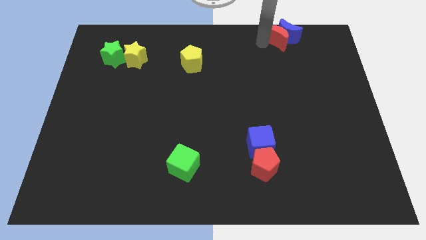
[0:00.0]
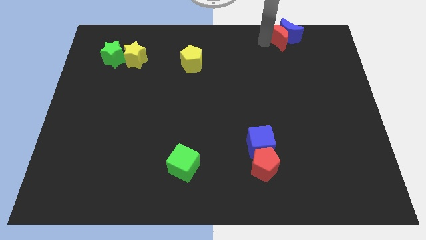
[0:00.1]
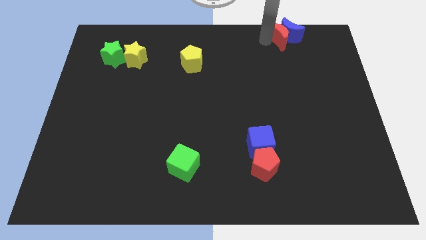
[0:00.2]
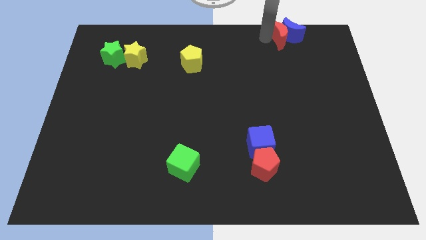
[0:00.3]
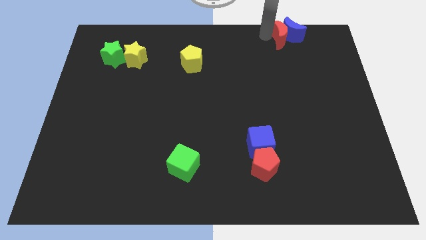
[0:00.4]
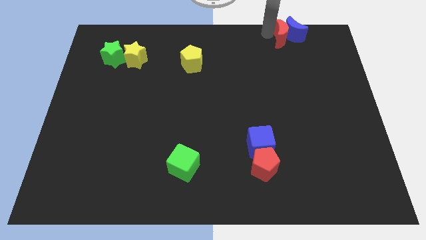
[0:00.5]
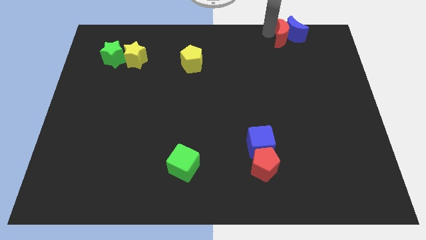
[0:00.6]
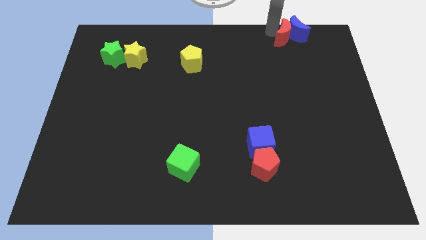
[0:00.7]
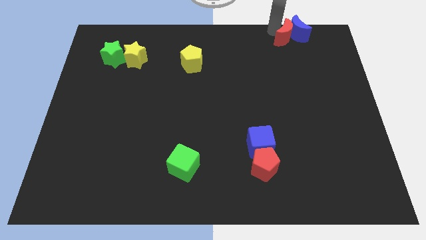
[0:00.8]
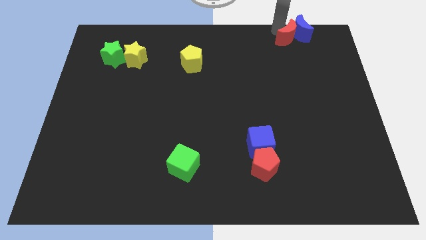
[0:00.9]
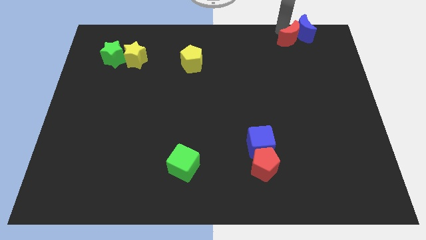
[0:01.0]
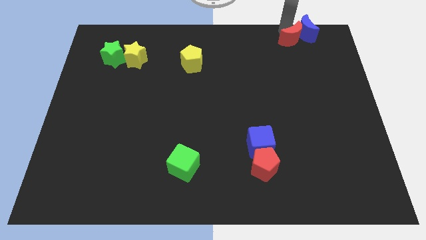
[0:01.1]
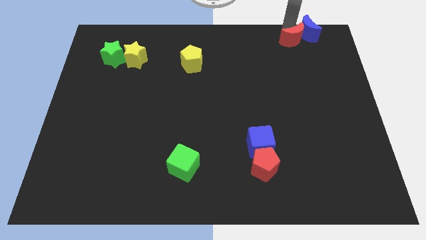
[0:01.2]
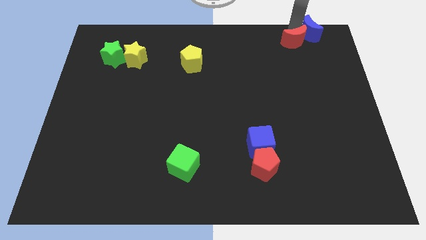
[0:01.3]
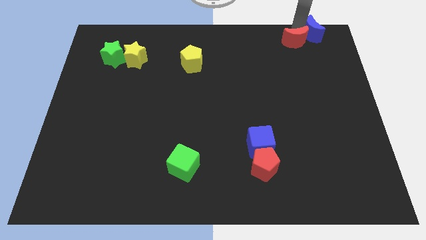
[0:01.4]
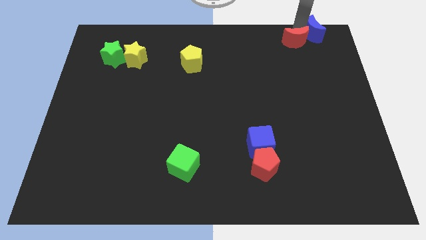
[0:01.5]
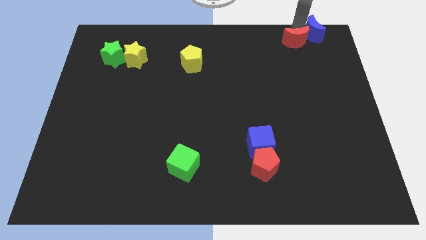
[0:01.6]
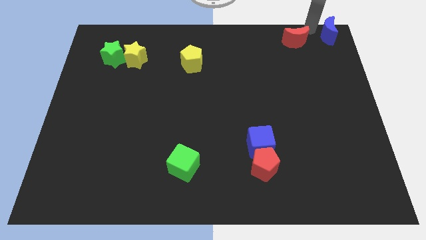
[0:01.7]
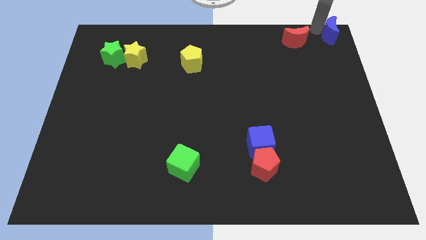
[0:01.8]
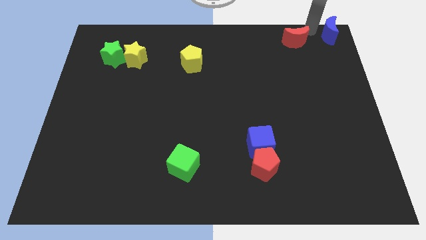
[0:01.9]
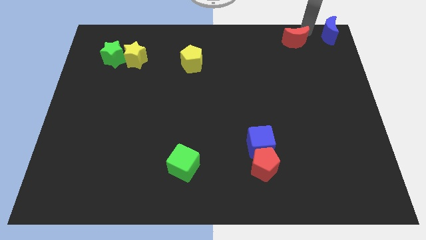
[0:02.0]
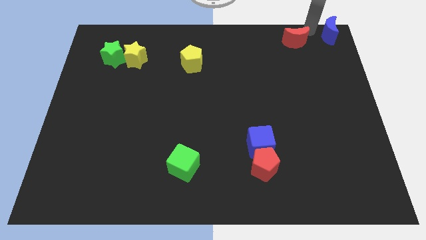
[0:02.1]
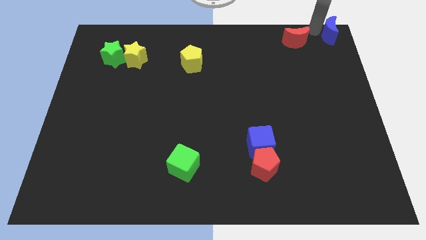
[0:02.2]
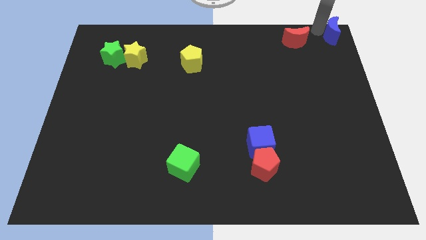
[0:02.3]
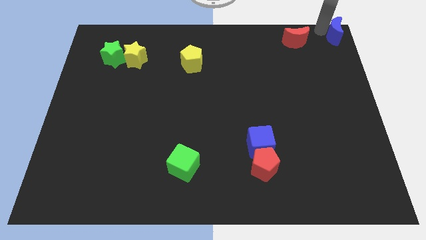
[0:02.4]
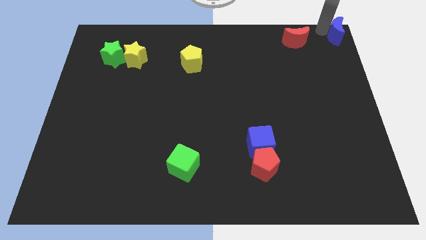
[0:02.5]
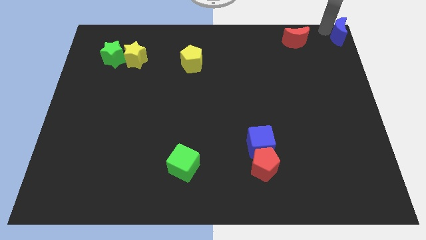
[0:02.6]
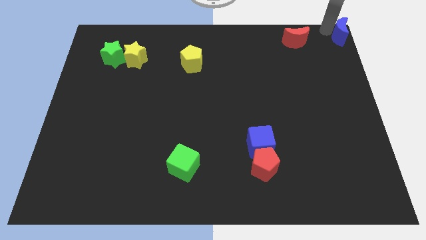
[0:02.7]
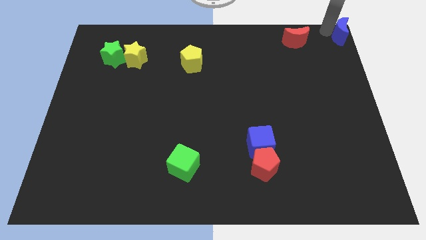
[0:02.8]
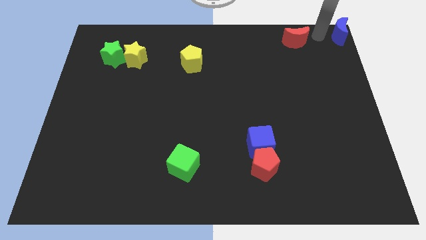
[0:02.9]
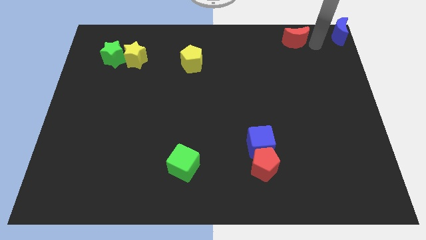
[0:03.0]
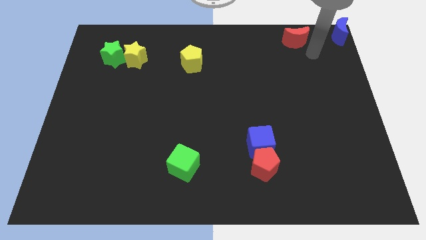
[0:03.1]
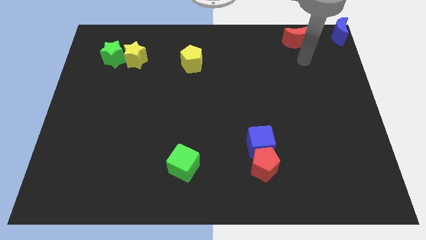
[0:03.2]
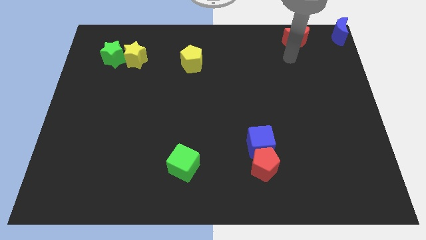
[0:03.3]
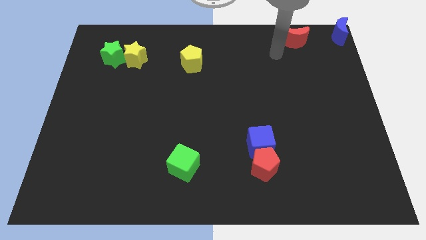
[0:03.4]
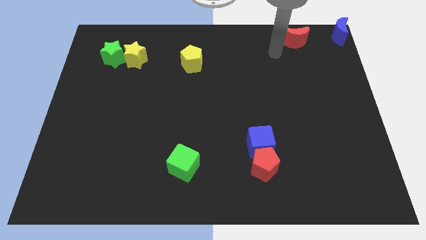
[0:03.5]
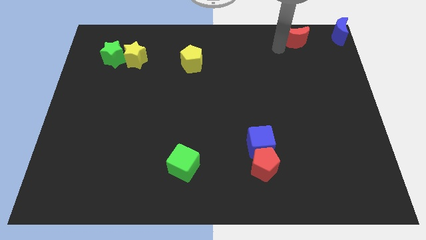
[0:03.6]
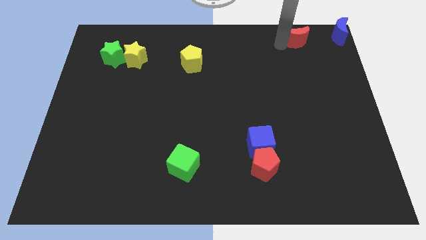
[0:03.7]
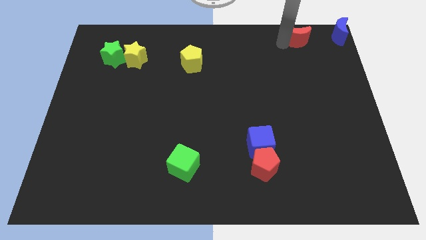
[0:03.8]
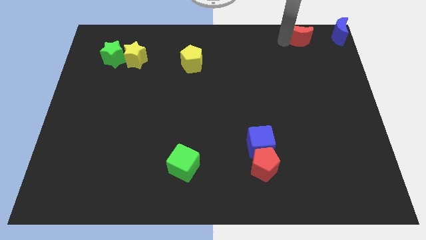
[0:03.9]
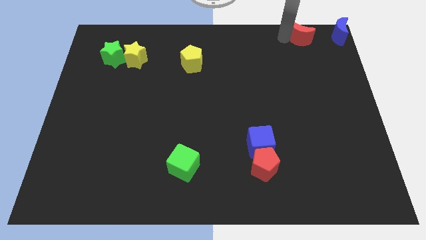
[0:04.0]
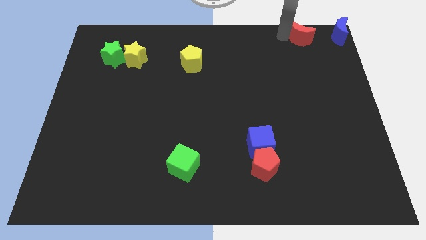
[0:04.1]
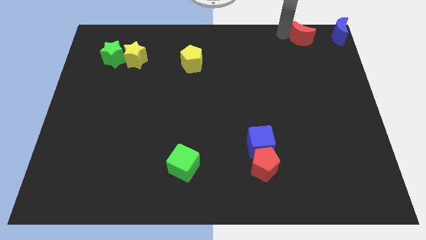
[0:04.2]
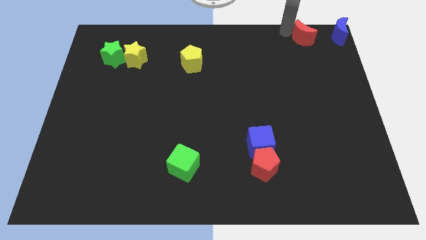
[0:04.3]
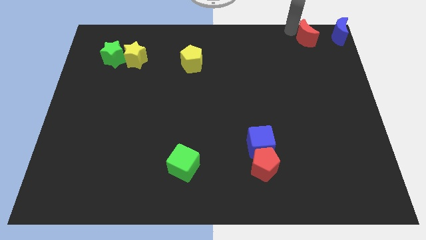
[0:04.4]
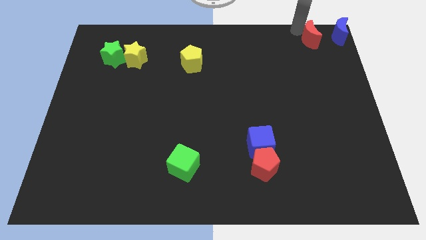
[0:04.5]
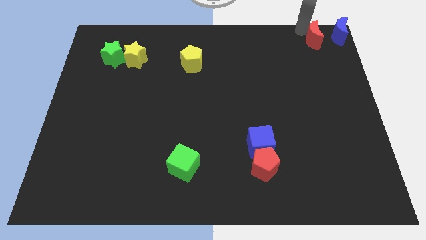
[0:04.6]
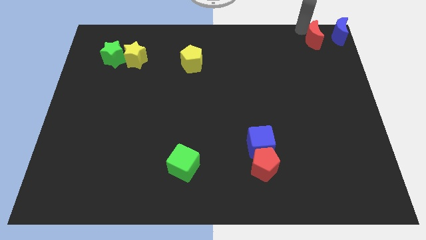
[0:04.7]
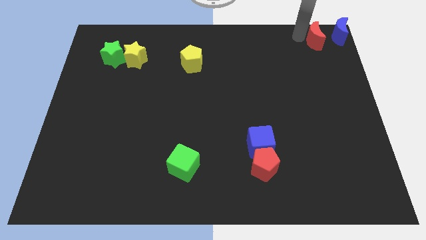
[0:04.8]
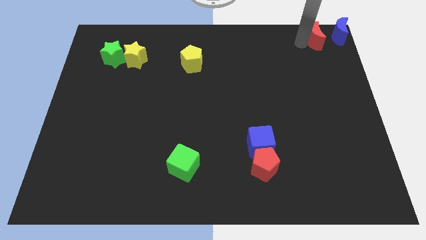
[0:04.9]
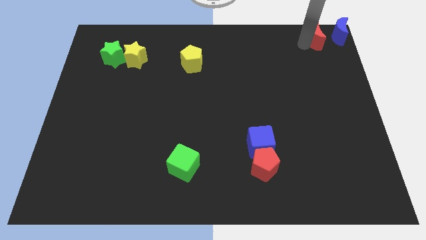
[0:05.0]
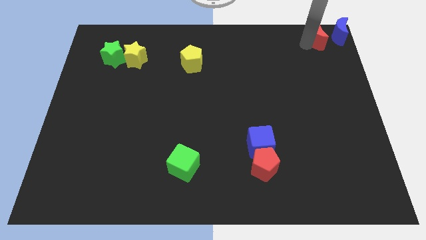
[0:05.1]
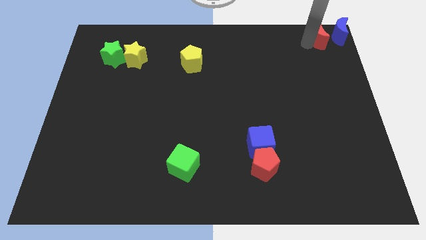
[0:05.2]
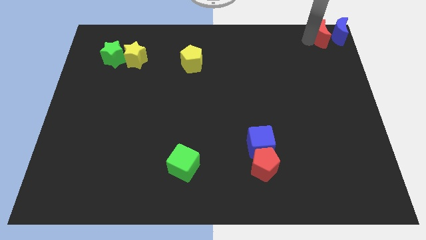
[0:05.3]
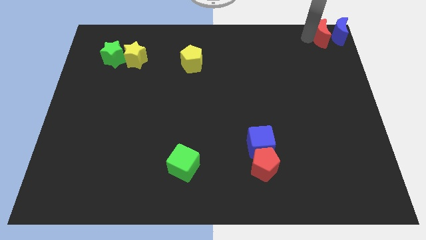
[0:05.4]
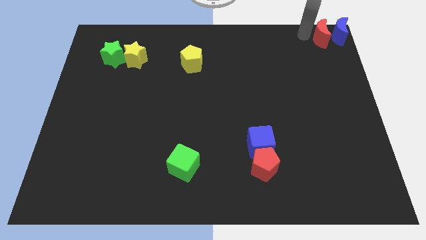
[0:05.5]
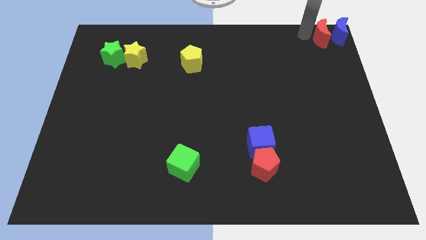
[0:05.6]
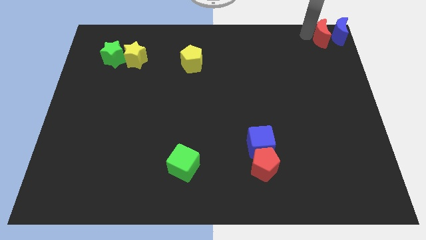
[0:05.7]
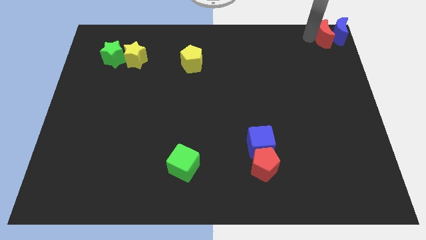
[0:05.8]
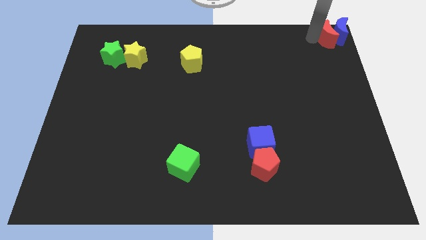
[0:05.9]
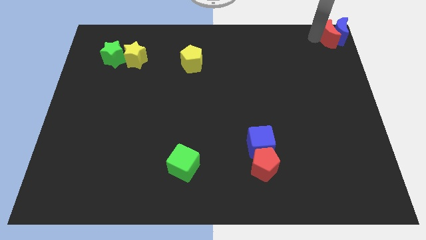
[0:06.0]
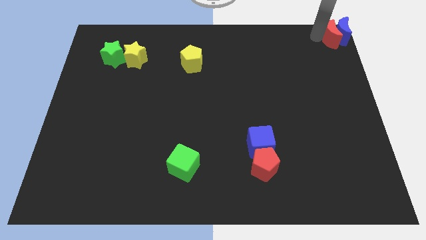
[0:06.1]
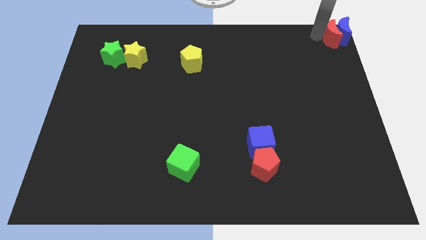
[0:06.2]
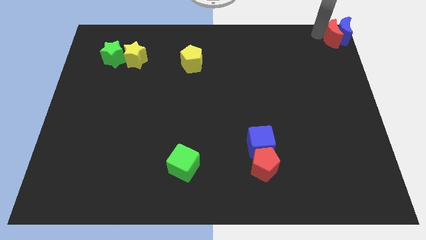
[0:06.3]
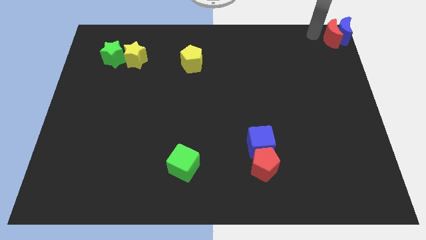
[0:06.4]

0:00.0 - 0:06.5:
move the red and blue crescents to the top right corner of the board

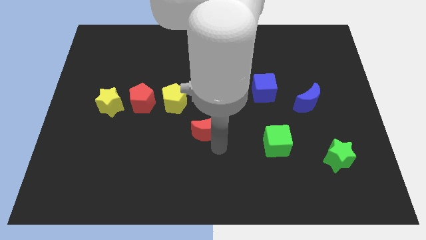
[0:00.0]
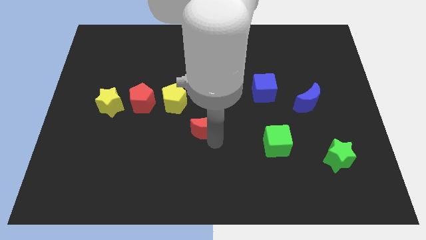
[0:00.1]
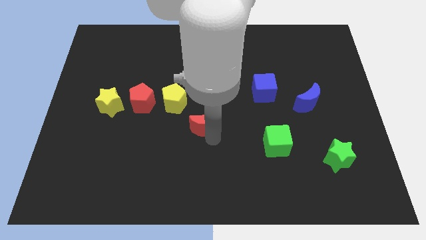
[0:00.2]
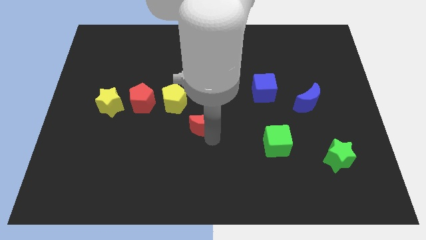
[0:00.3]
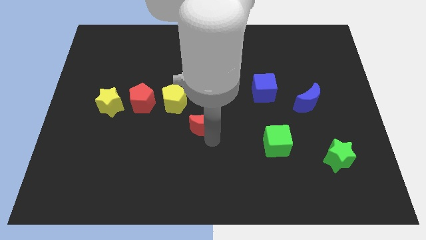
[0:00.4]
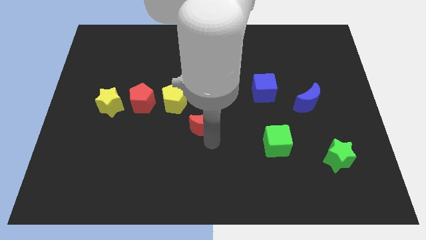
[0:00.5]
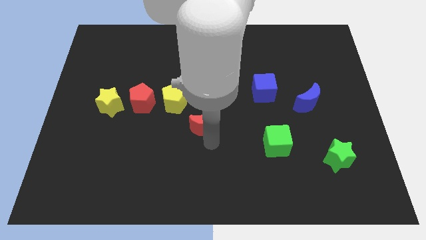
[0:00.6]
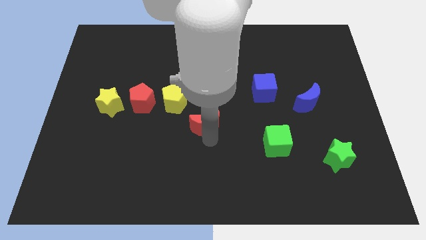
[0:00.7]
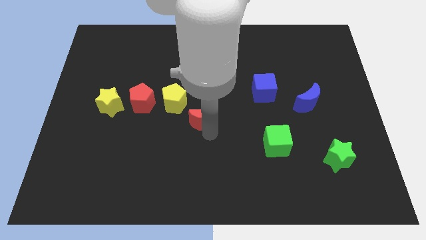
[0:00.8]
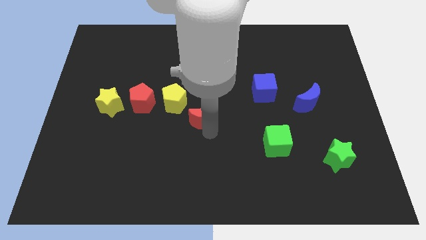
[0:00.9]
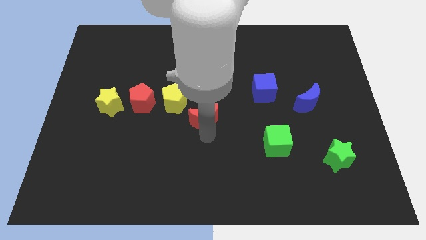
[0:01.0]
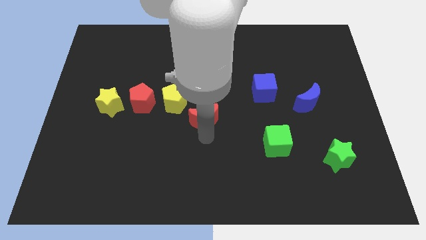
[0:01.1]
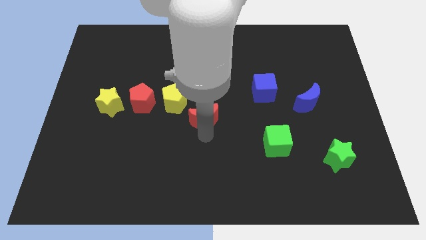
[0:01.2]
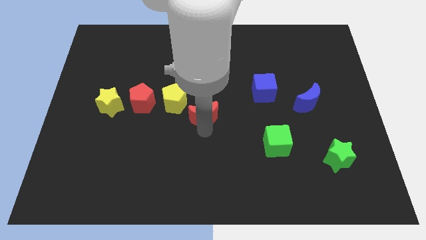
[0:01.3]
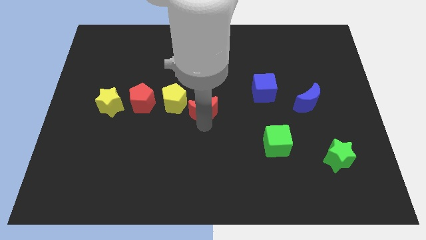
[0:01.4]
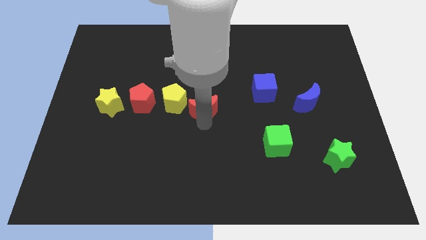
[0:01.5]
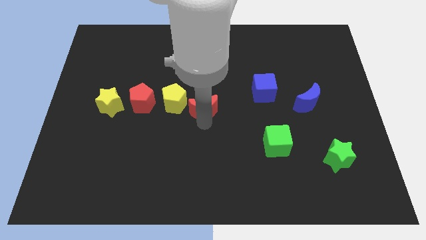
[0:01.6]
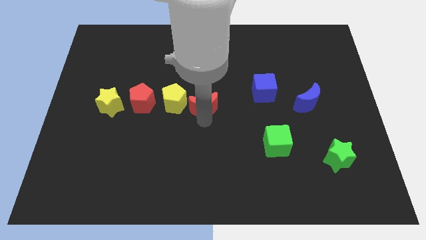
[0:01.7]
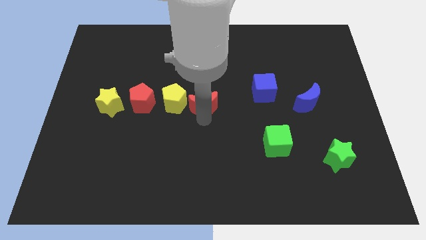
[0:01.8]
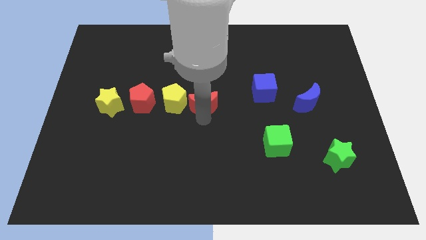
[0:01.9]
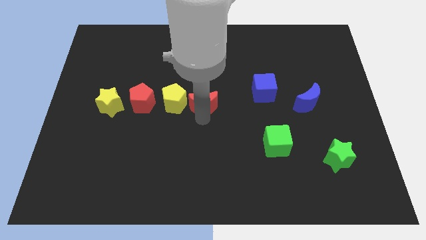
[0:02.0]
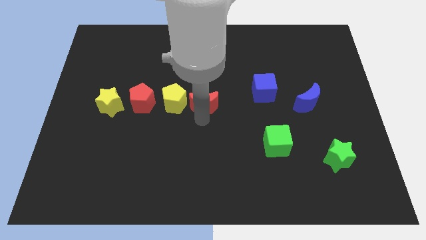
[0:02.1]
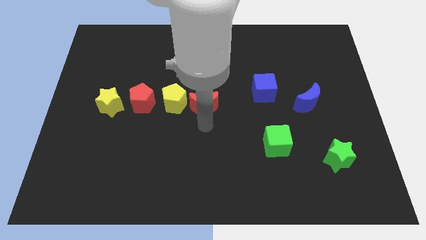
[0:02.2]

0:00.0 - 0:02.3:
place the red crescent right of yellow pentagon

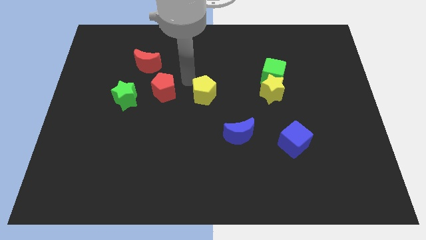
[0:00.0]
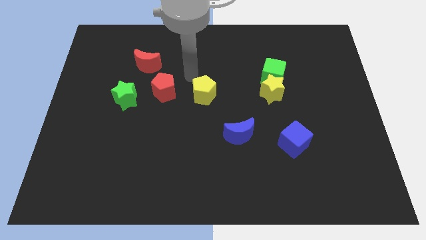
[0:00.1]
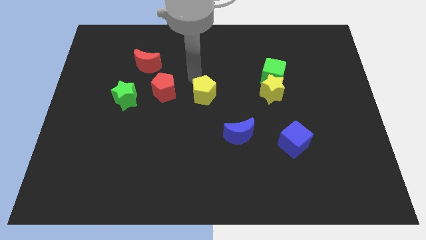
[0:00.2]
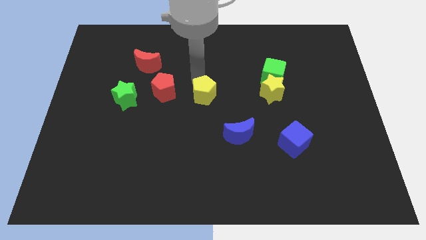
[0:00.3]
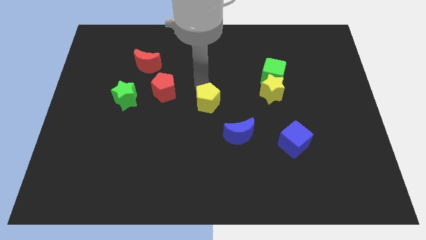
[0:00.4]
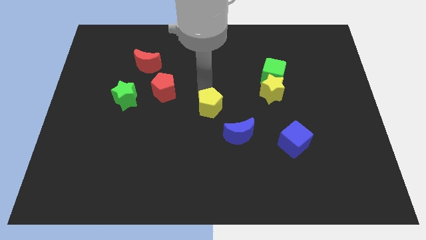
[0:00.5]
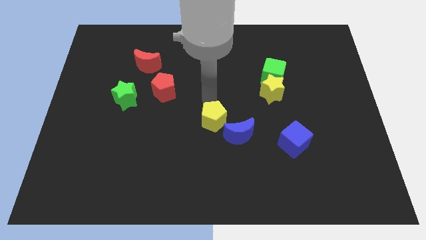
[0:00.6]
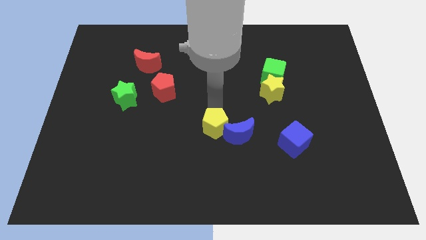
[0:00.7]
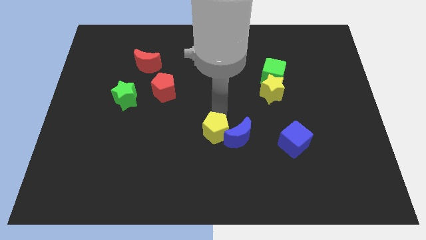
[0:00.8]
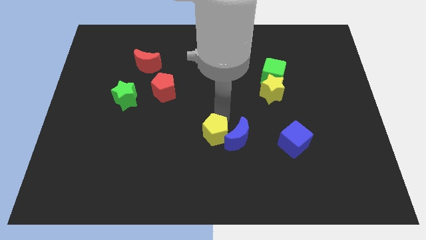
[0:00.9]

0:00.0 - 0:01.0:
push the yellow pentagon into the blue crescent
